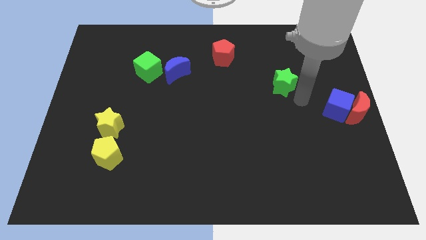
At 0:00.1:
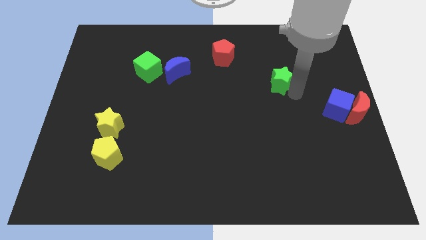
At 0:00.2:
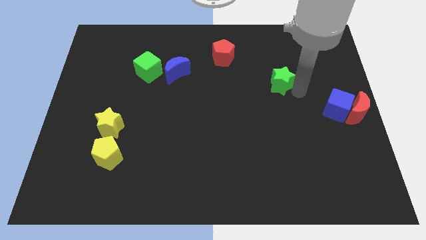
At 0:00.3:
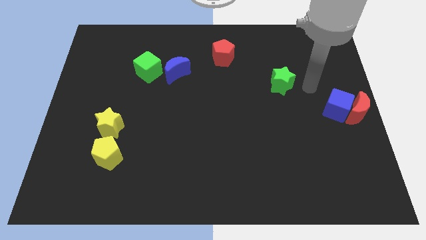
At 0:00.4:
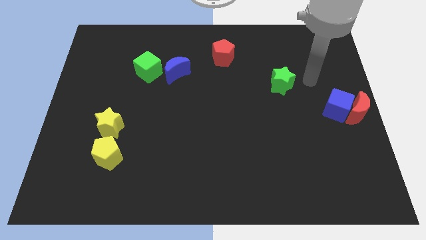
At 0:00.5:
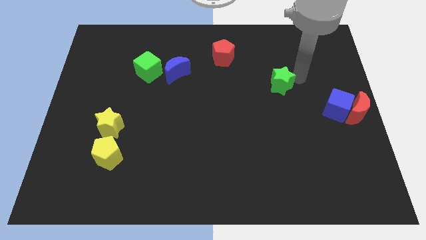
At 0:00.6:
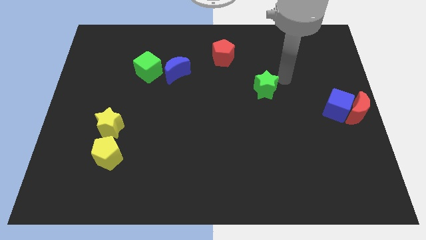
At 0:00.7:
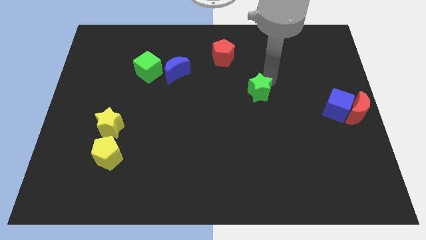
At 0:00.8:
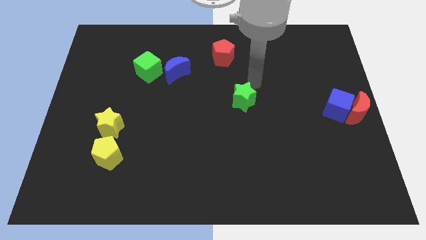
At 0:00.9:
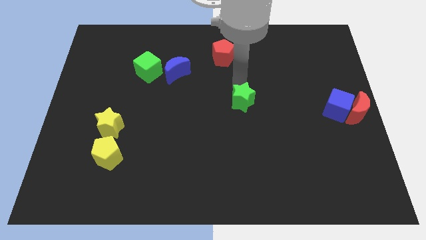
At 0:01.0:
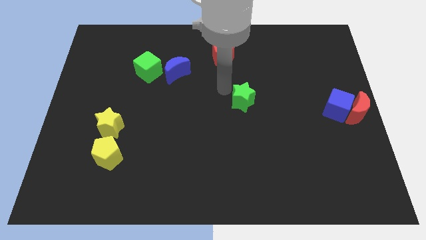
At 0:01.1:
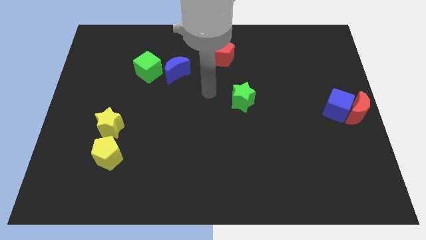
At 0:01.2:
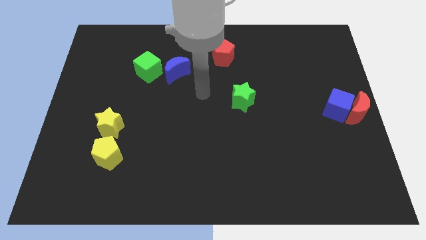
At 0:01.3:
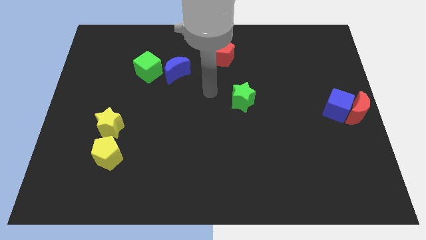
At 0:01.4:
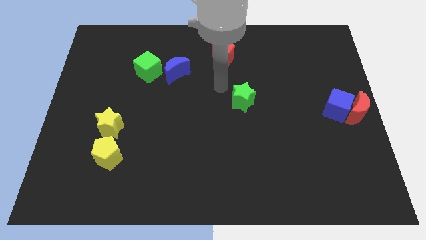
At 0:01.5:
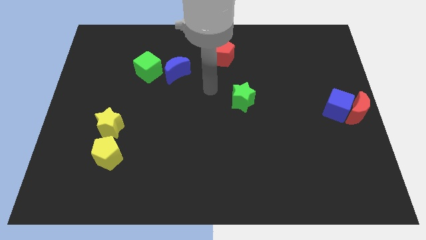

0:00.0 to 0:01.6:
push the green star towards the center

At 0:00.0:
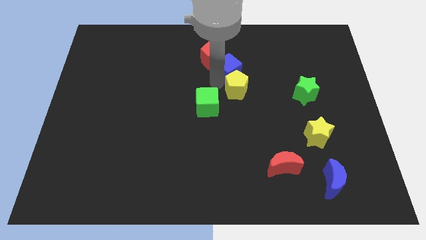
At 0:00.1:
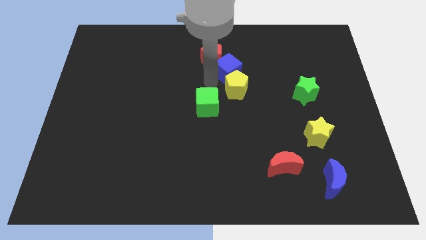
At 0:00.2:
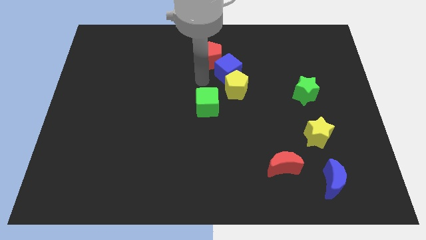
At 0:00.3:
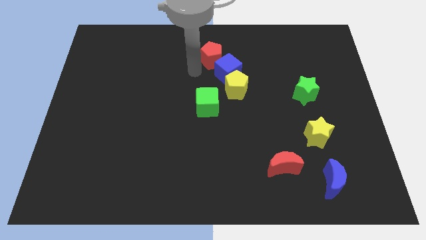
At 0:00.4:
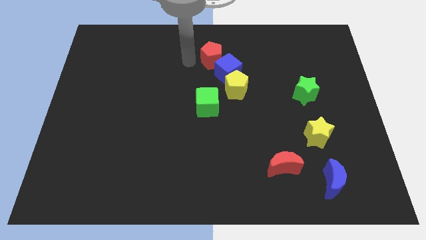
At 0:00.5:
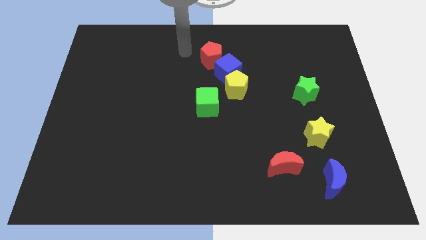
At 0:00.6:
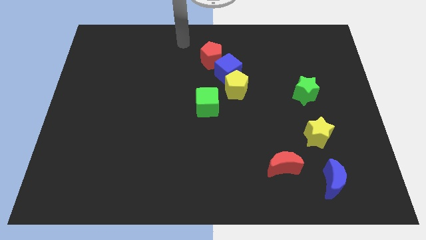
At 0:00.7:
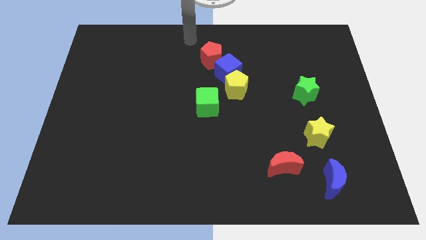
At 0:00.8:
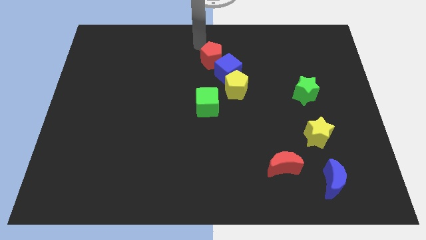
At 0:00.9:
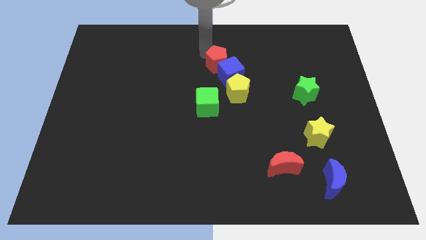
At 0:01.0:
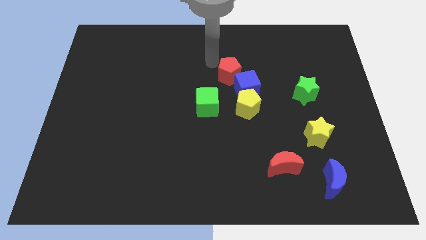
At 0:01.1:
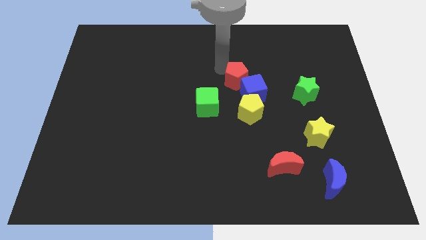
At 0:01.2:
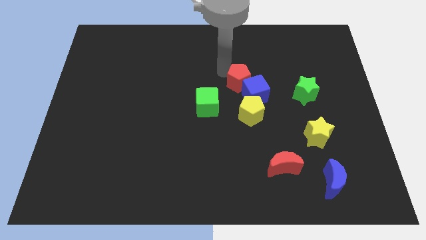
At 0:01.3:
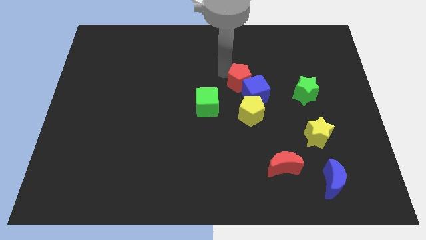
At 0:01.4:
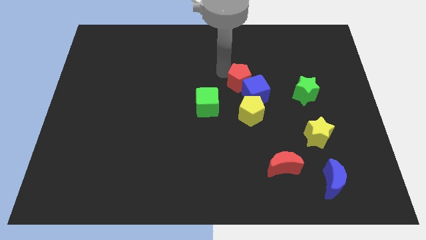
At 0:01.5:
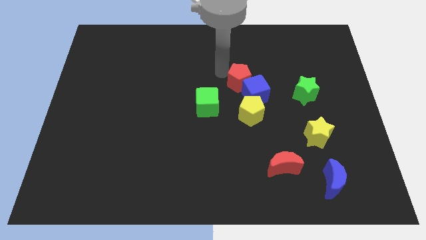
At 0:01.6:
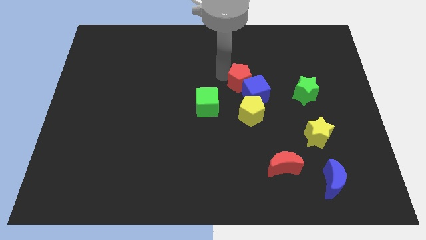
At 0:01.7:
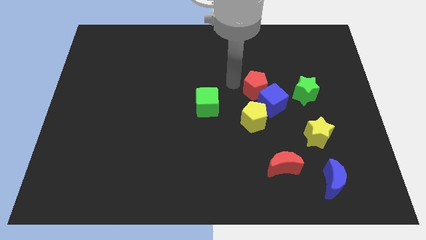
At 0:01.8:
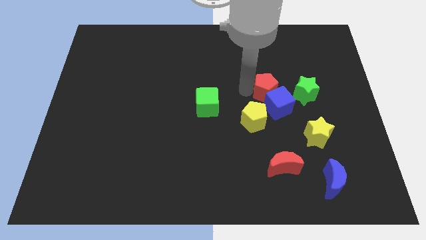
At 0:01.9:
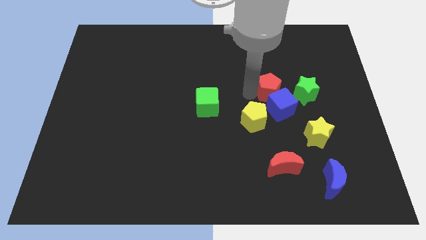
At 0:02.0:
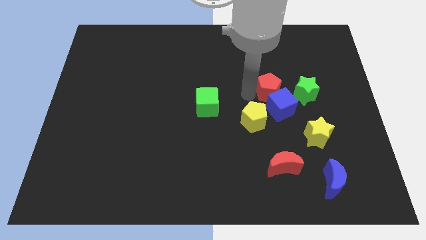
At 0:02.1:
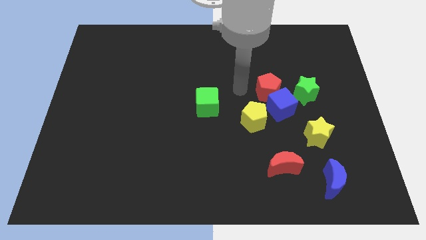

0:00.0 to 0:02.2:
push the blue cube with red pentagon towards the right of yellow pentagon

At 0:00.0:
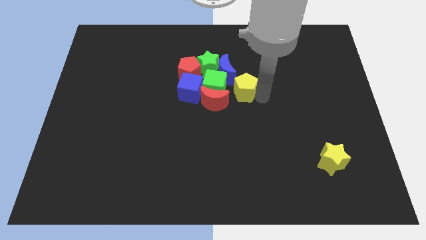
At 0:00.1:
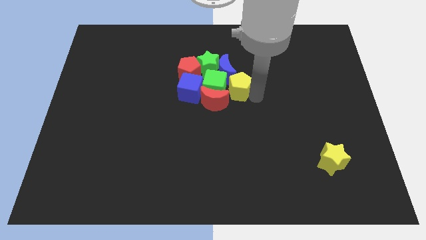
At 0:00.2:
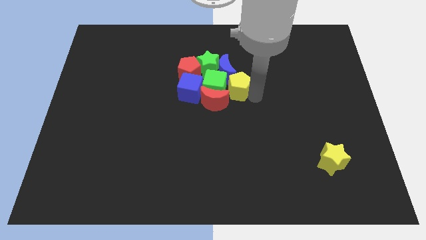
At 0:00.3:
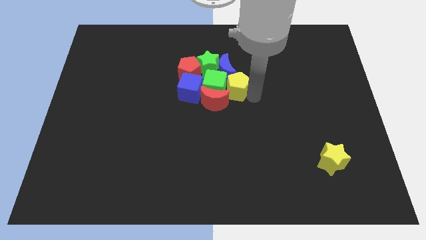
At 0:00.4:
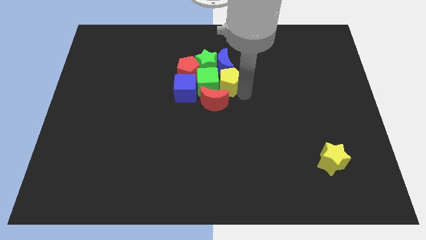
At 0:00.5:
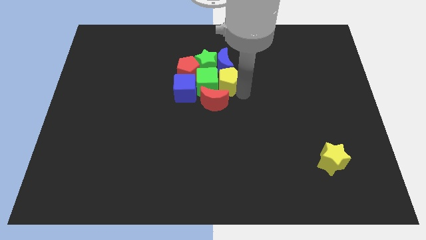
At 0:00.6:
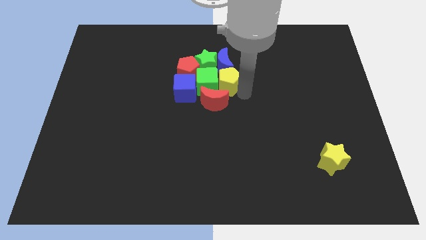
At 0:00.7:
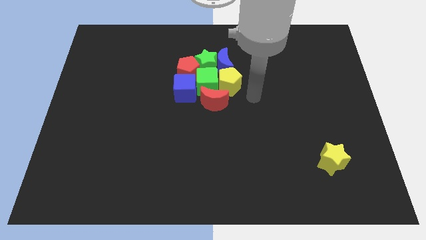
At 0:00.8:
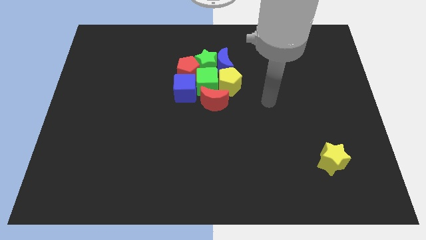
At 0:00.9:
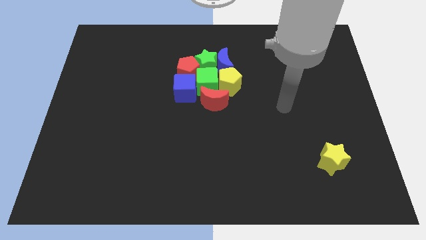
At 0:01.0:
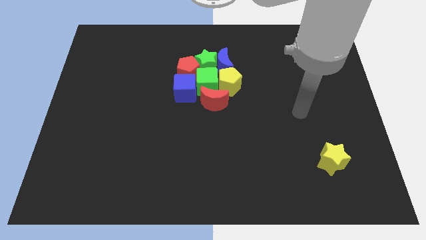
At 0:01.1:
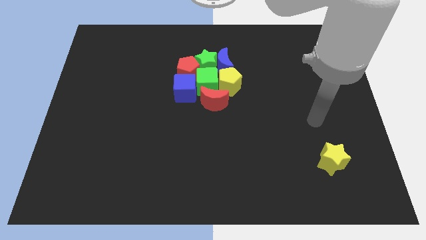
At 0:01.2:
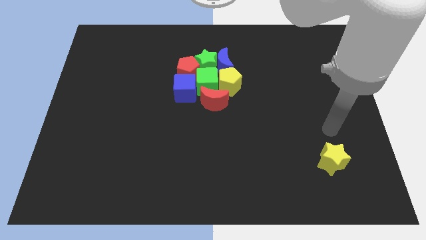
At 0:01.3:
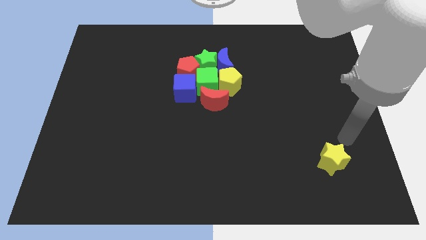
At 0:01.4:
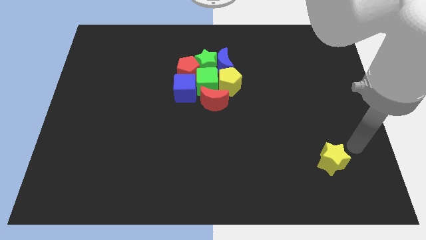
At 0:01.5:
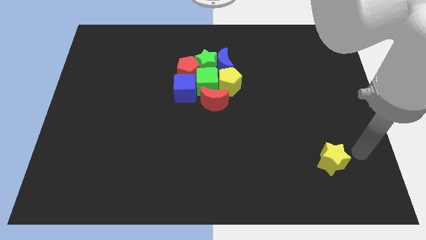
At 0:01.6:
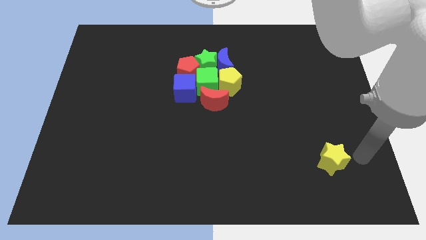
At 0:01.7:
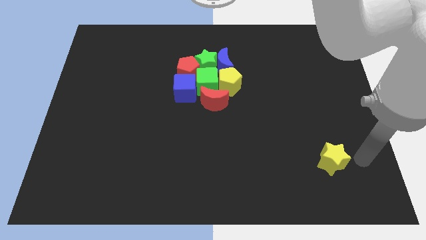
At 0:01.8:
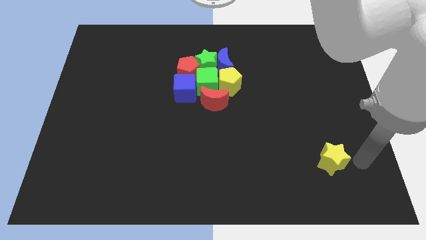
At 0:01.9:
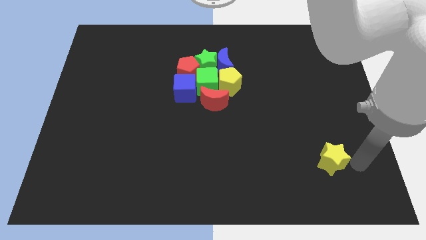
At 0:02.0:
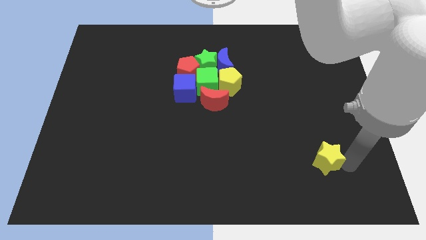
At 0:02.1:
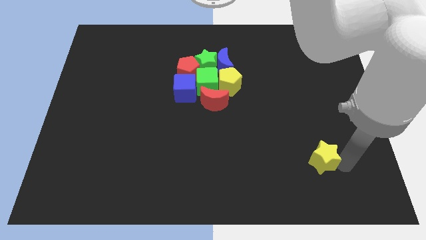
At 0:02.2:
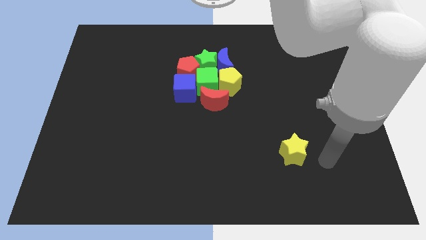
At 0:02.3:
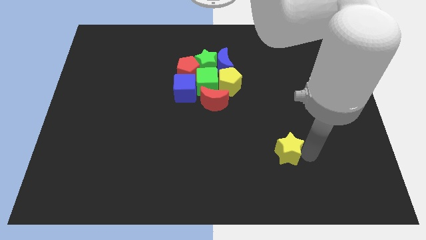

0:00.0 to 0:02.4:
push the yellow star towards the red crescent

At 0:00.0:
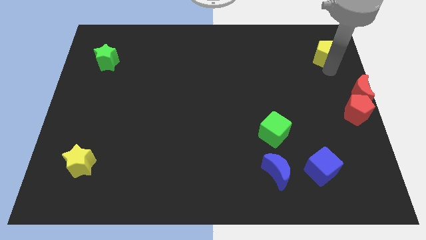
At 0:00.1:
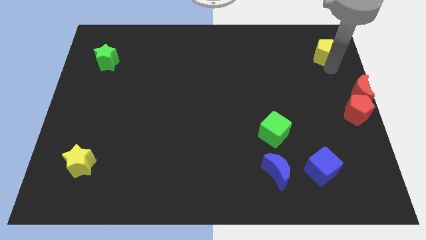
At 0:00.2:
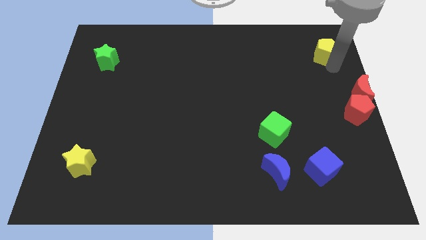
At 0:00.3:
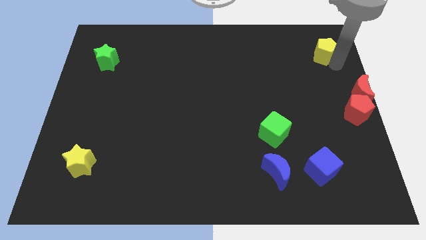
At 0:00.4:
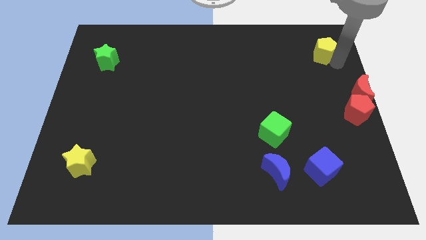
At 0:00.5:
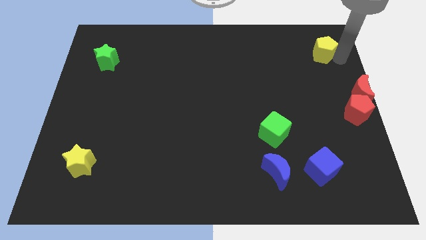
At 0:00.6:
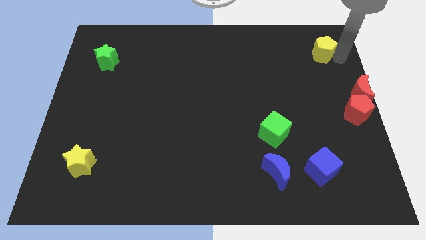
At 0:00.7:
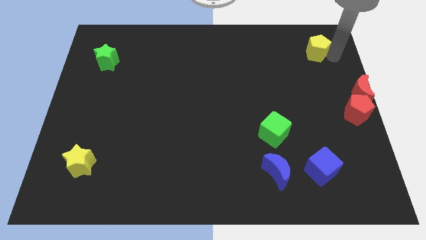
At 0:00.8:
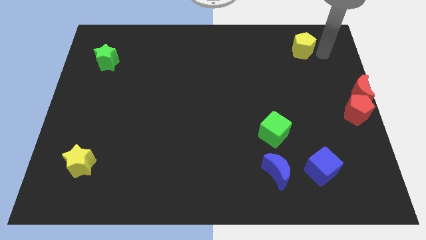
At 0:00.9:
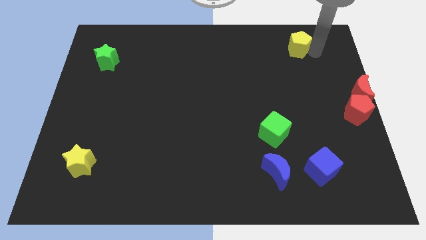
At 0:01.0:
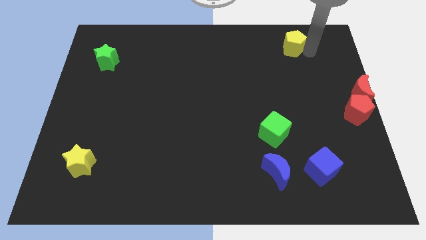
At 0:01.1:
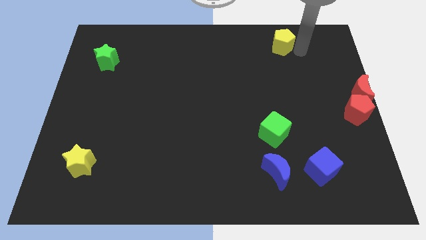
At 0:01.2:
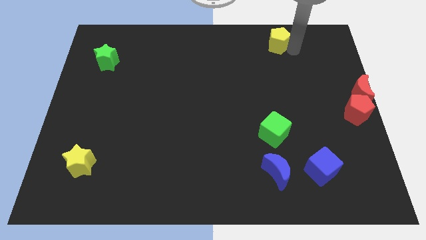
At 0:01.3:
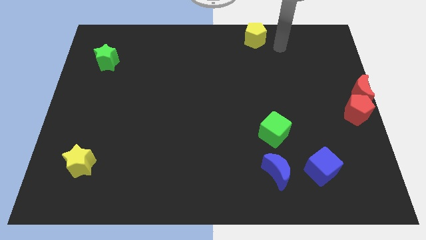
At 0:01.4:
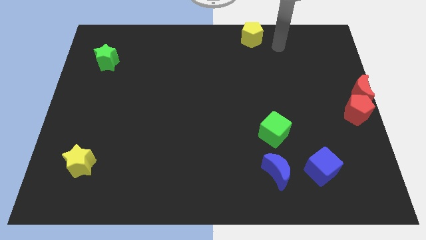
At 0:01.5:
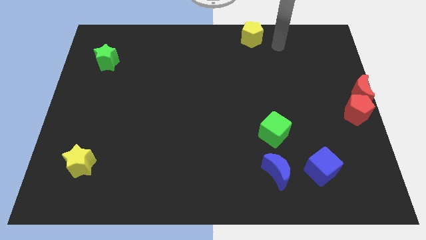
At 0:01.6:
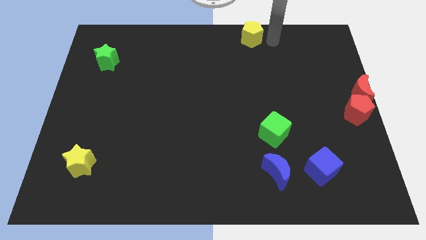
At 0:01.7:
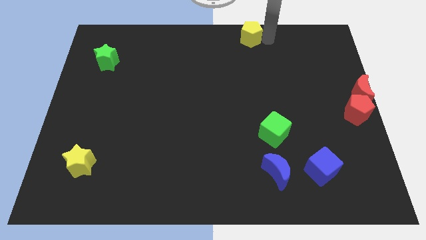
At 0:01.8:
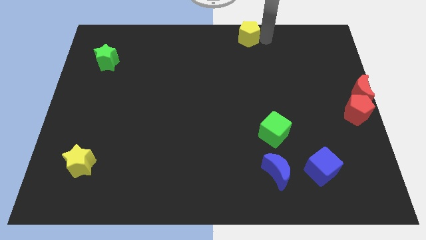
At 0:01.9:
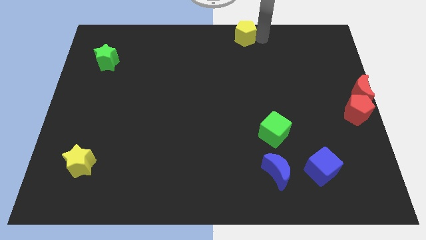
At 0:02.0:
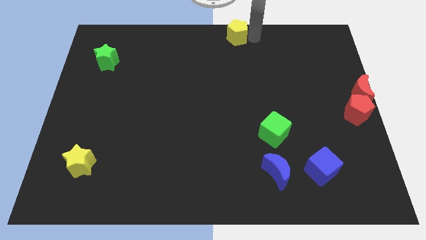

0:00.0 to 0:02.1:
push the yellow pentagon to the top center

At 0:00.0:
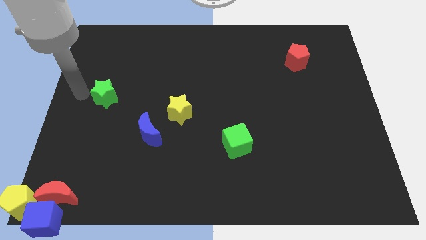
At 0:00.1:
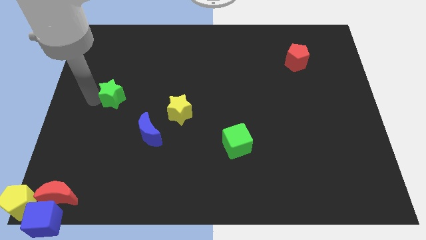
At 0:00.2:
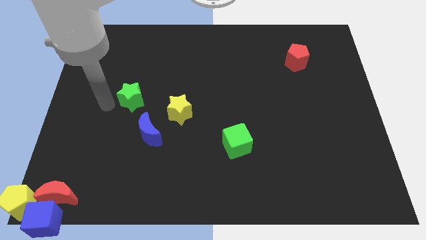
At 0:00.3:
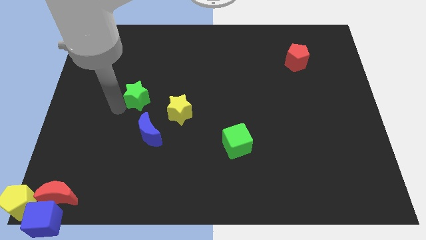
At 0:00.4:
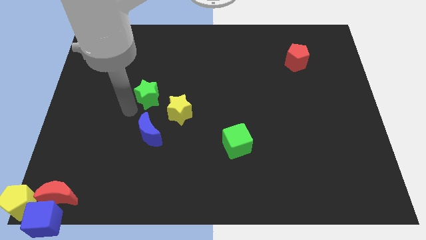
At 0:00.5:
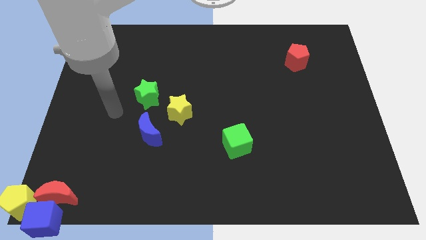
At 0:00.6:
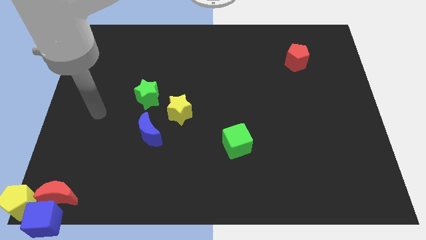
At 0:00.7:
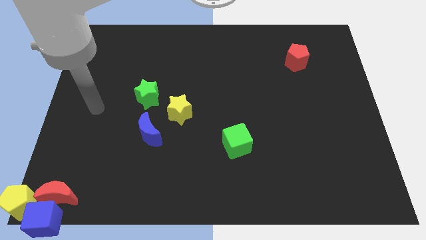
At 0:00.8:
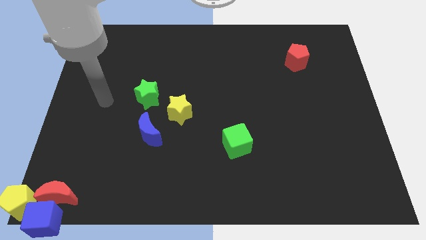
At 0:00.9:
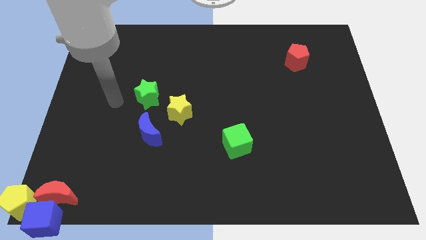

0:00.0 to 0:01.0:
move the green star close to the yellow star
